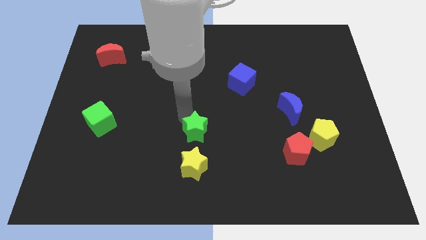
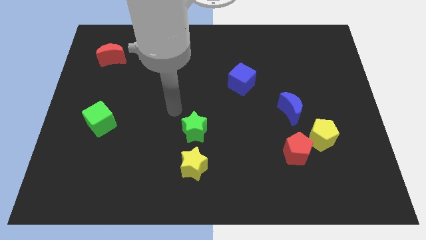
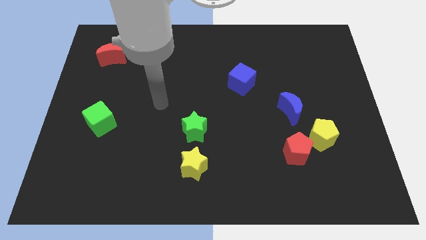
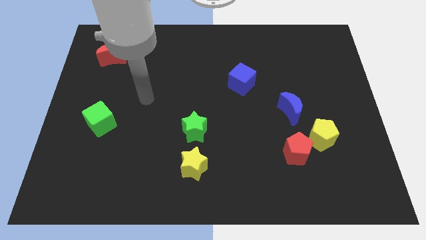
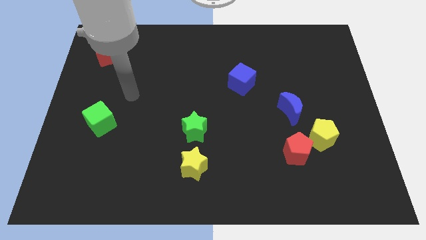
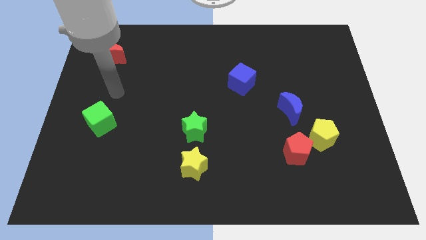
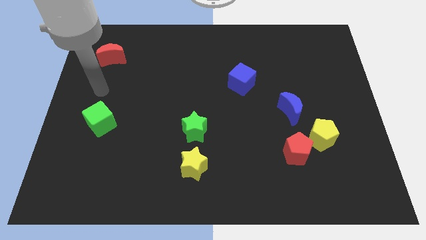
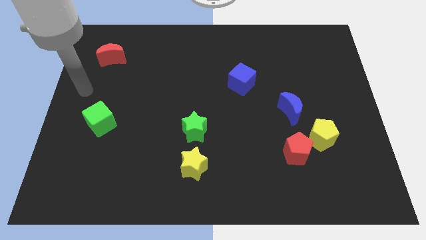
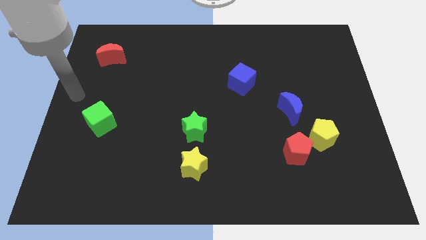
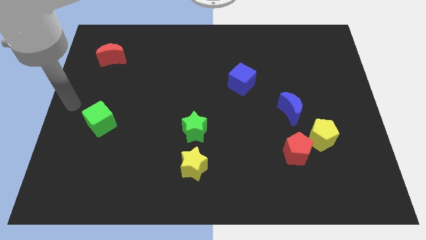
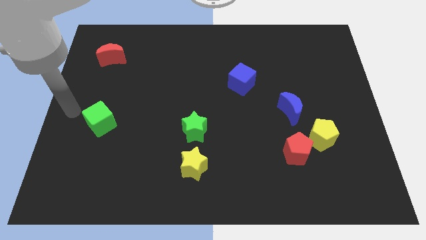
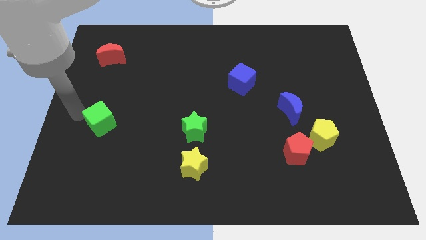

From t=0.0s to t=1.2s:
move your arm to the left of green cube

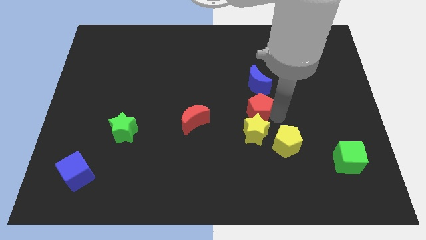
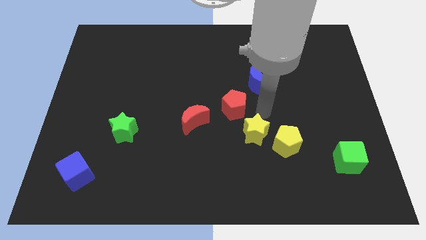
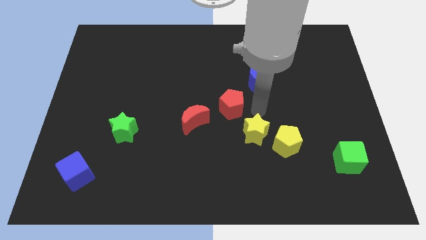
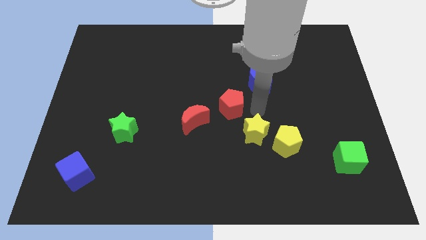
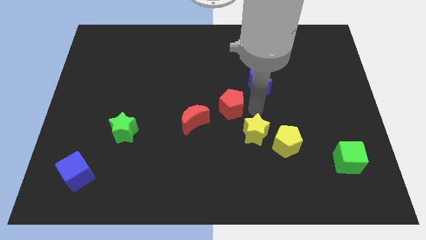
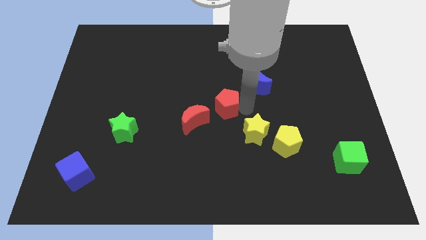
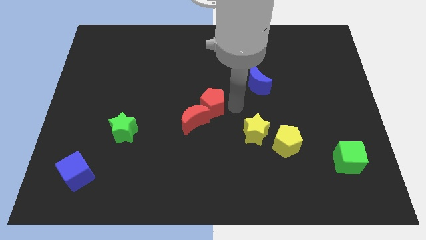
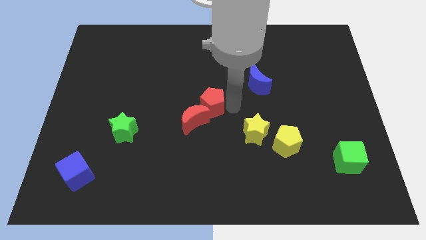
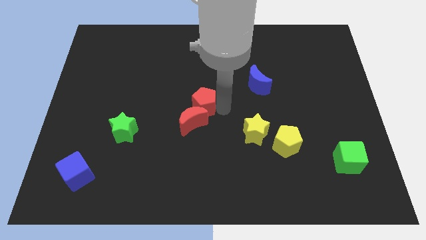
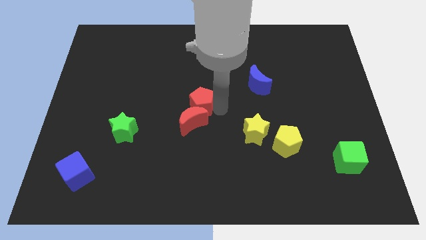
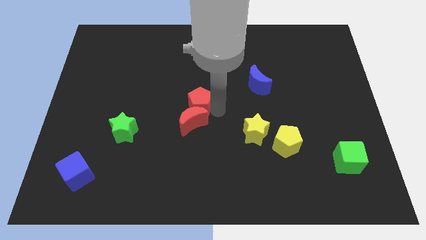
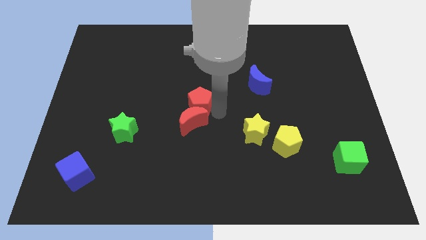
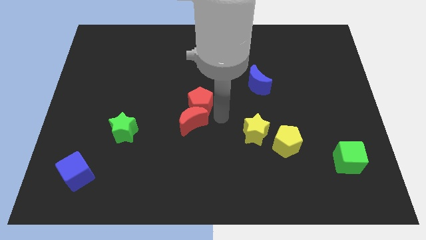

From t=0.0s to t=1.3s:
move the red pentagon to the center of the board

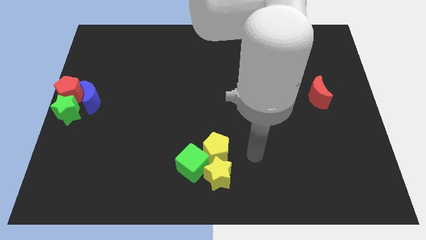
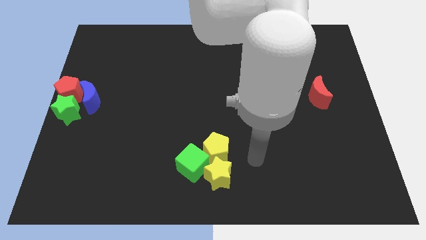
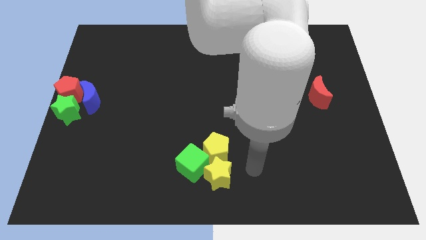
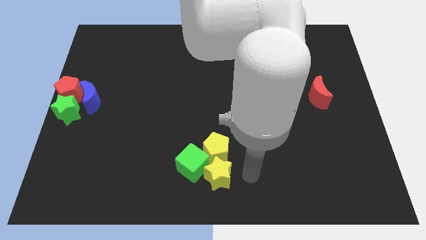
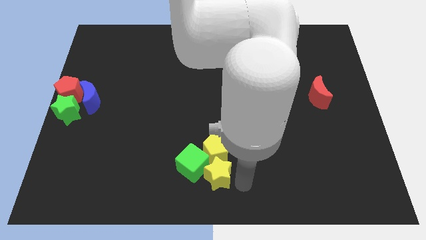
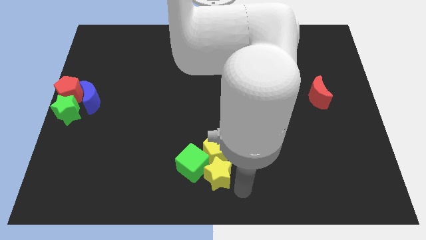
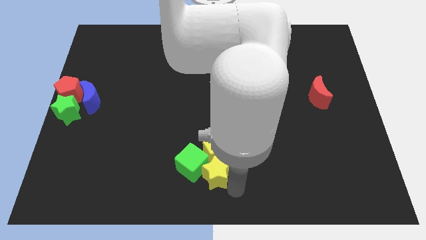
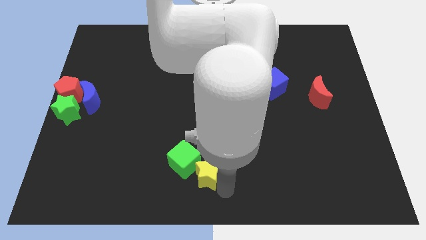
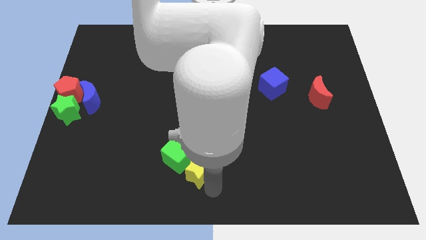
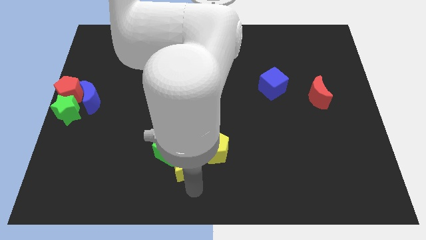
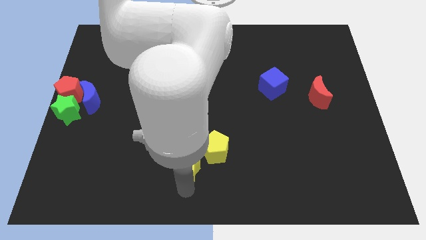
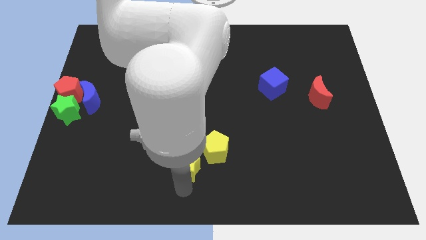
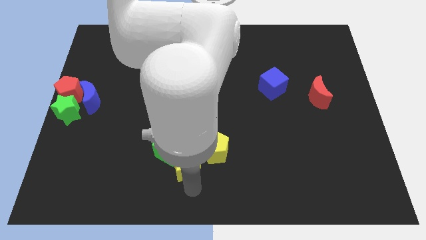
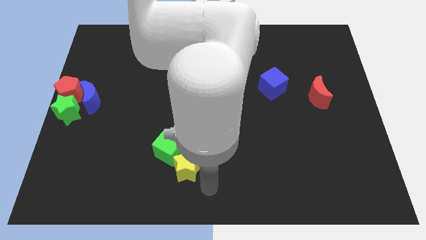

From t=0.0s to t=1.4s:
push the yellow star into the green cube

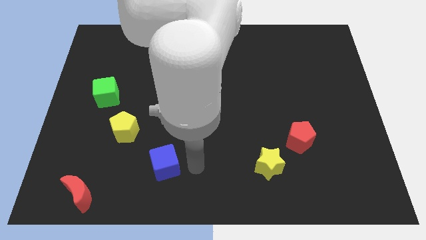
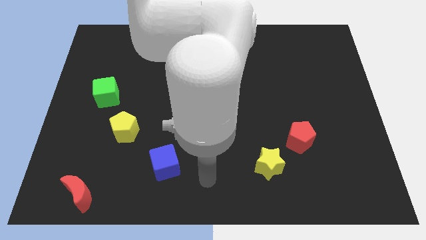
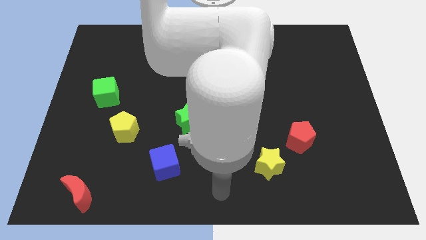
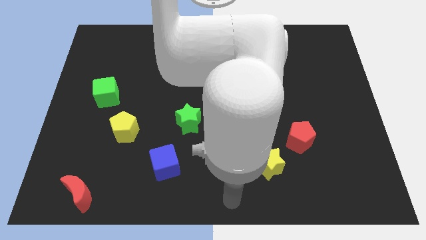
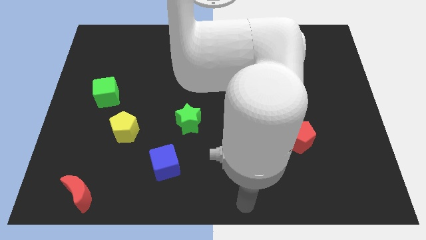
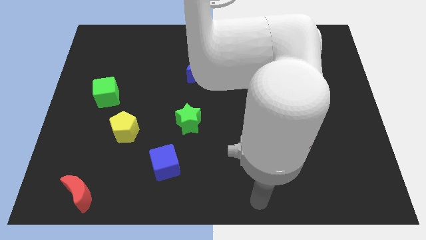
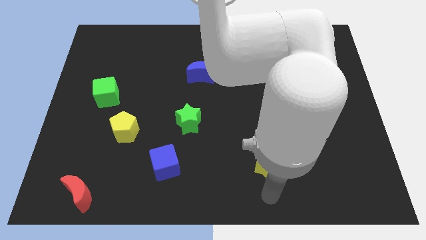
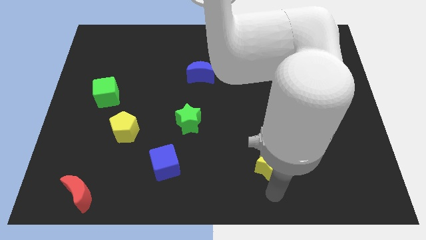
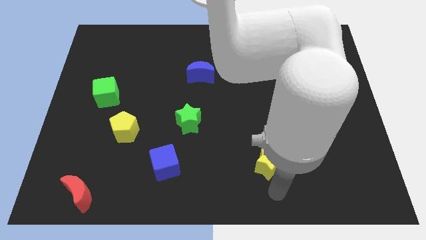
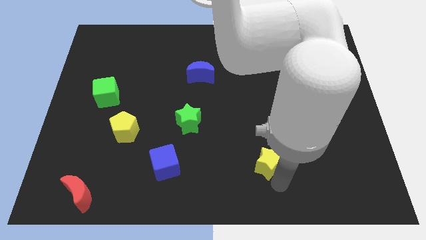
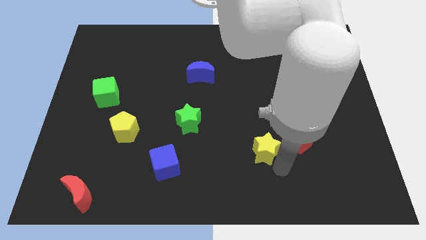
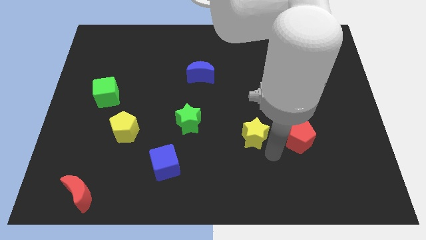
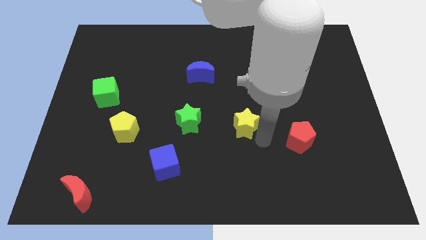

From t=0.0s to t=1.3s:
move yellow star right beside the green star

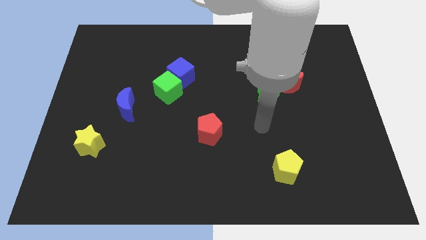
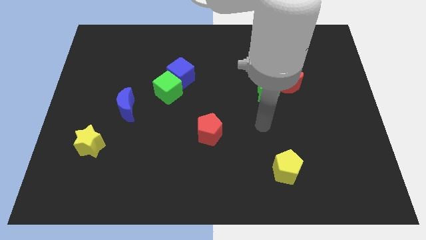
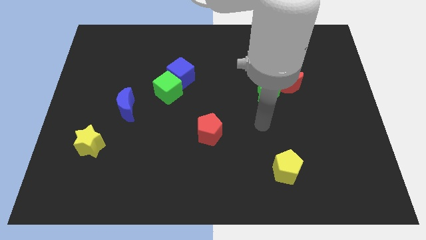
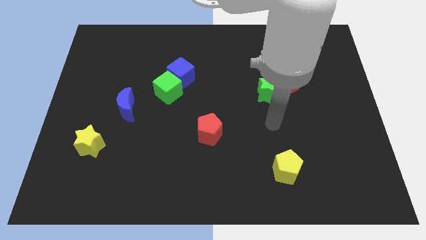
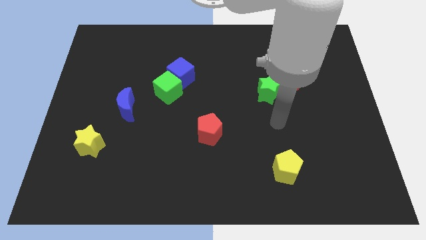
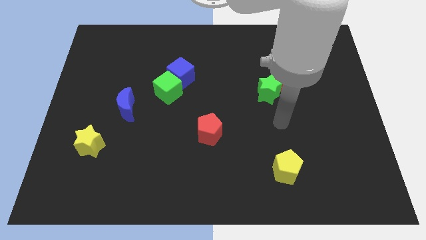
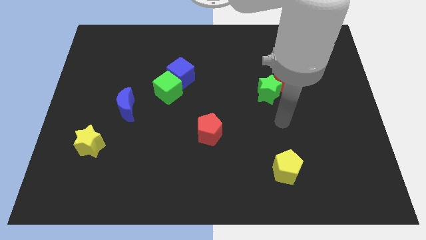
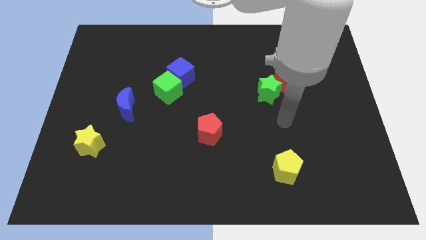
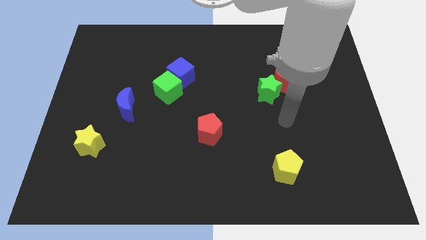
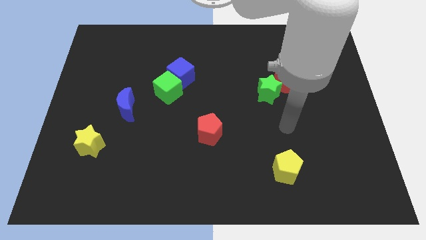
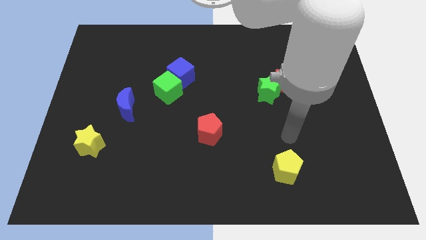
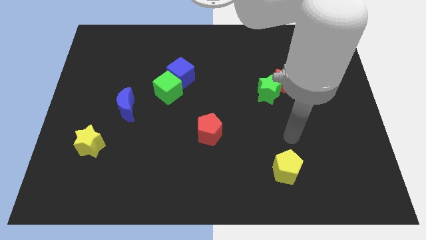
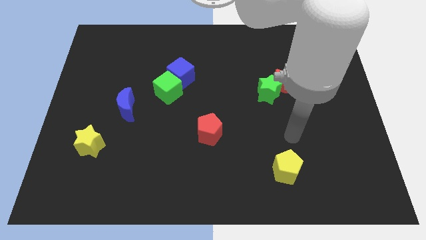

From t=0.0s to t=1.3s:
point your arm at the top of the yellow pentagon

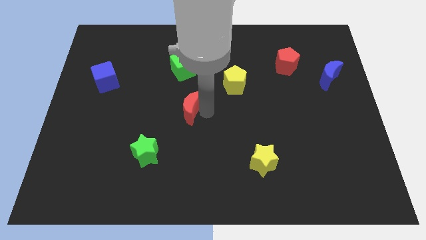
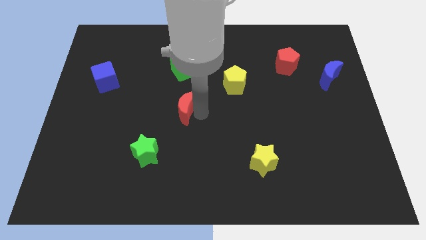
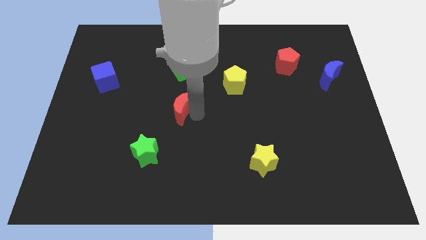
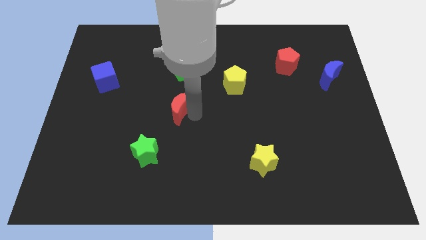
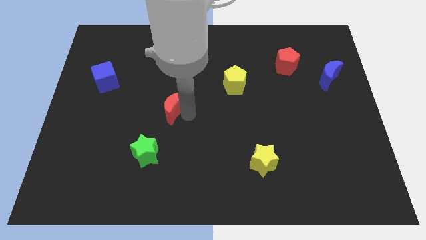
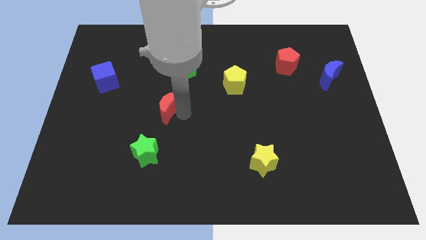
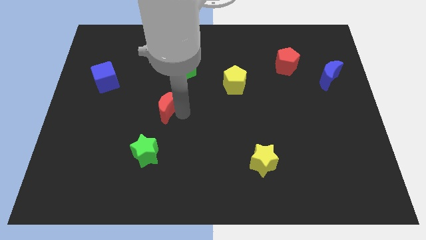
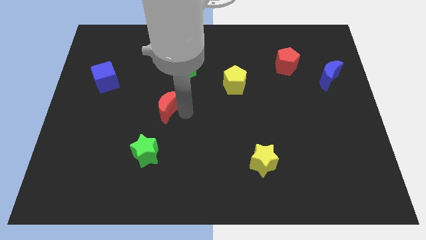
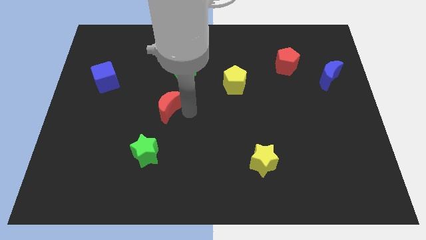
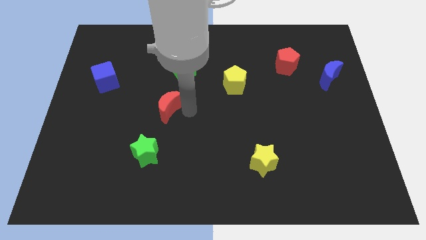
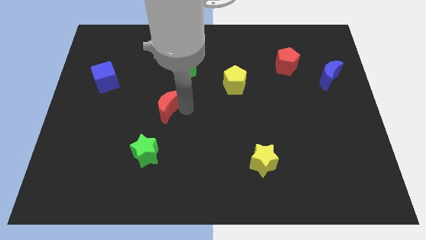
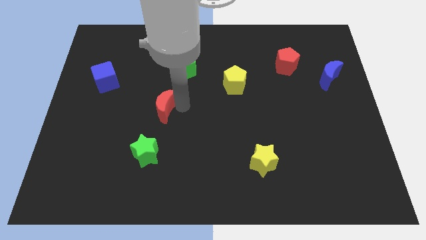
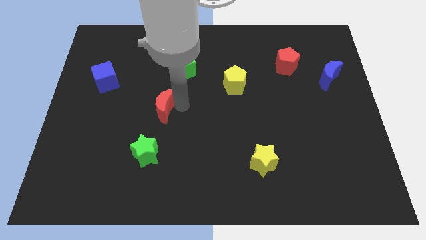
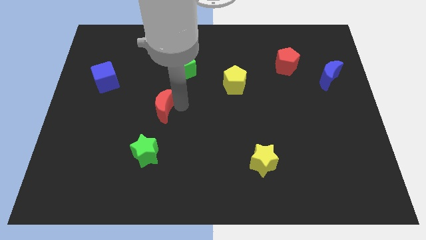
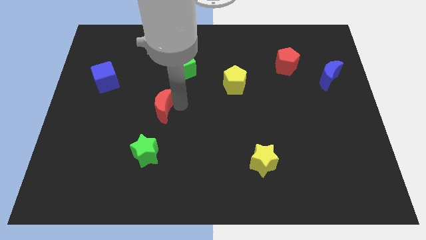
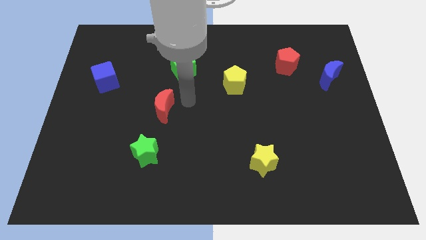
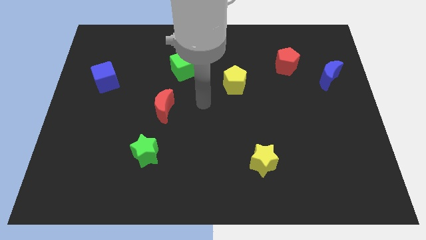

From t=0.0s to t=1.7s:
move the red crescent in between the green blocks

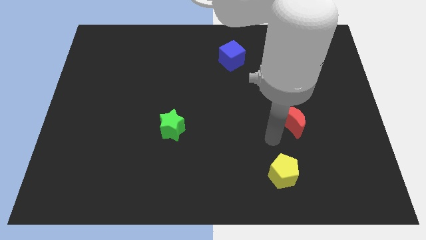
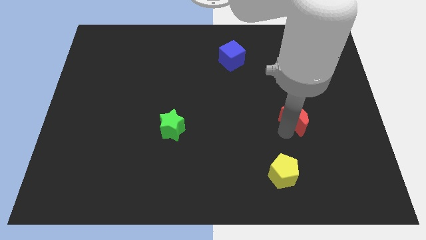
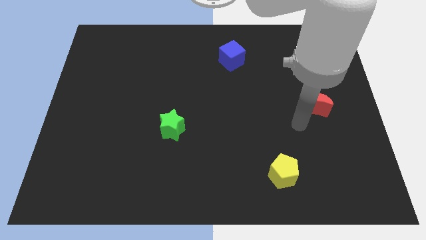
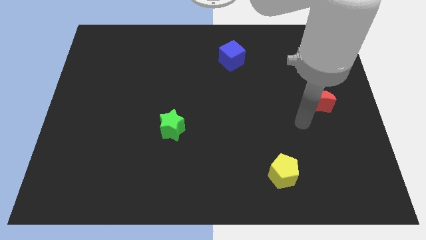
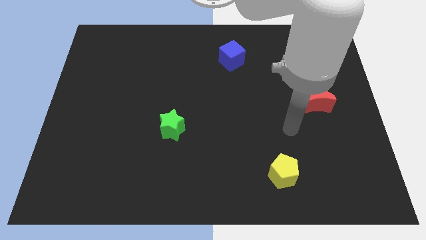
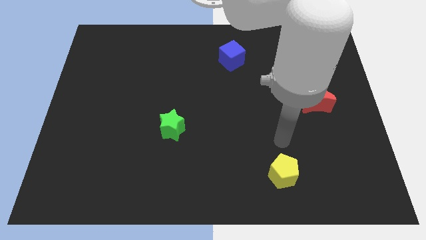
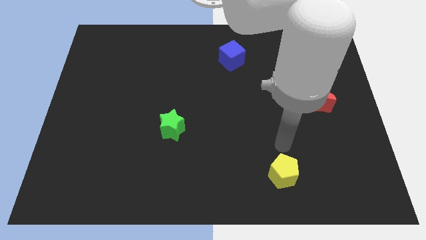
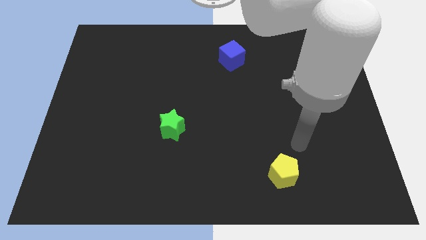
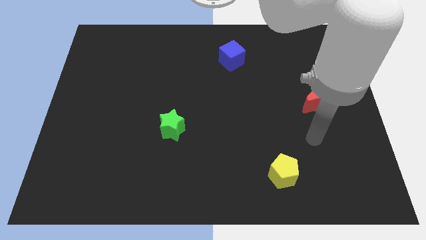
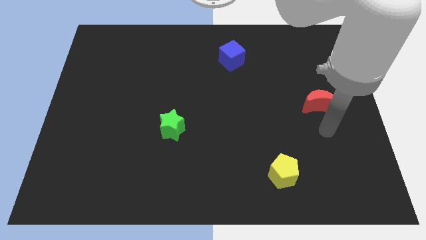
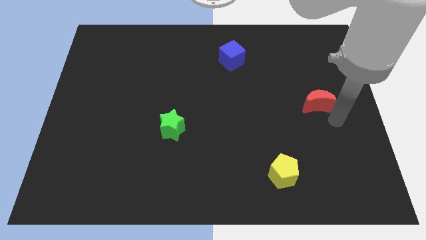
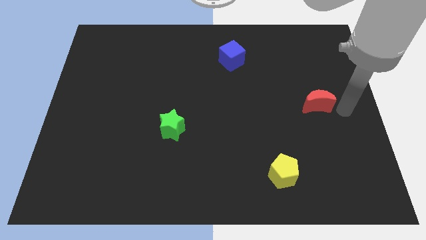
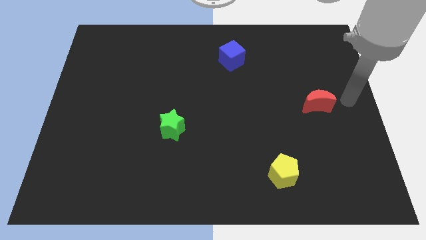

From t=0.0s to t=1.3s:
push the red crescent to the center right
